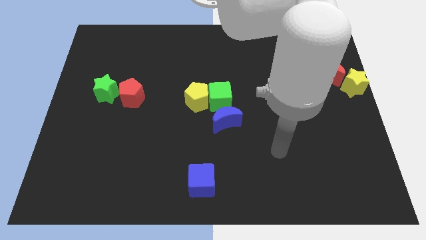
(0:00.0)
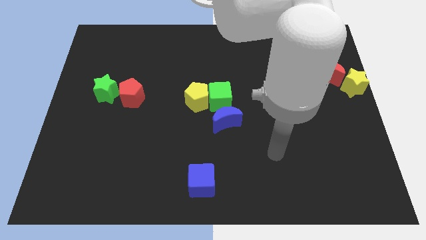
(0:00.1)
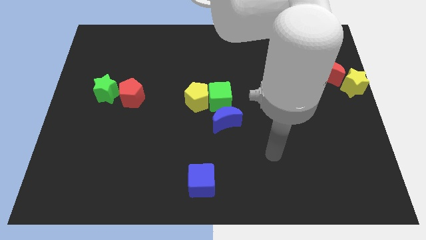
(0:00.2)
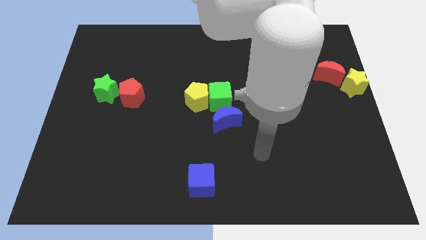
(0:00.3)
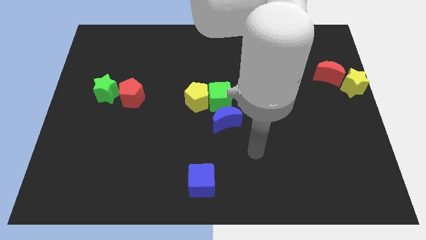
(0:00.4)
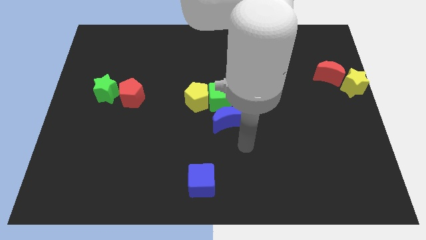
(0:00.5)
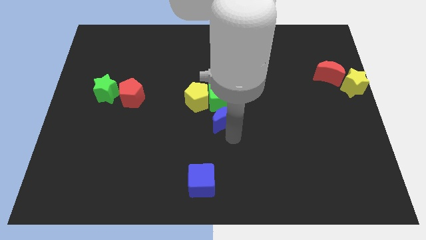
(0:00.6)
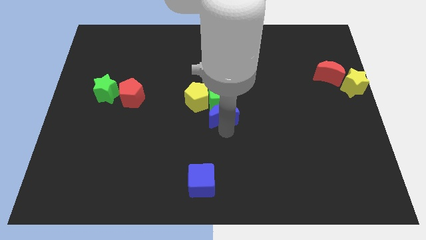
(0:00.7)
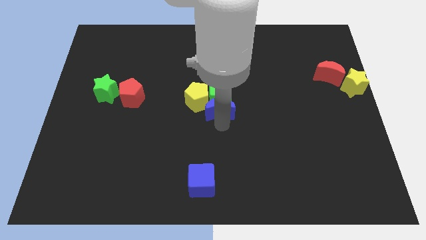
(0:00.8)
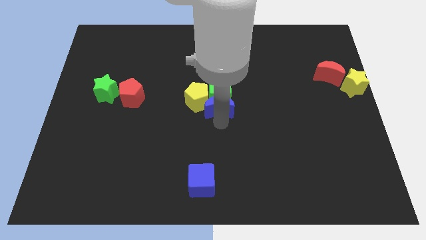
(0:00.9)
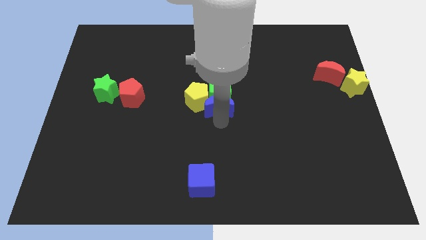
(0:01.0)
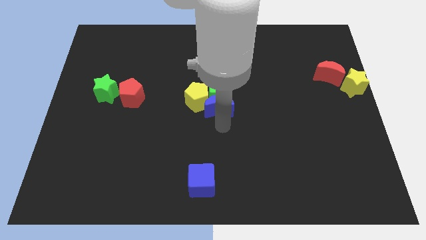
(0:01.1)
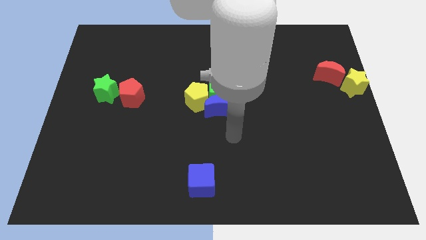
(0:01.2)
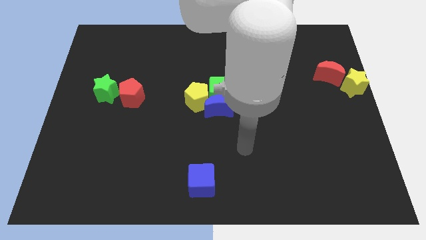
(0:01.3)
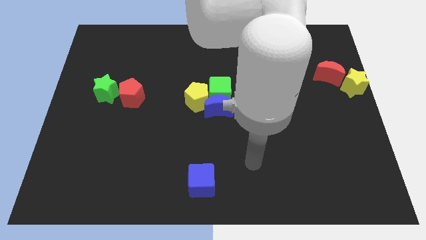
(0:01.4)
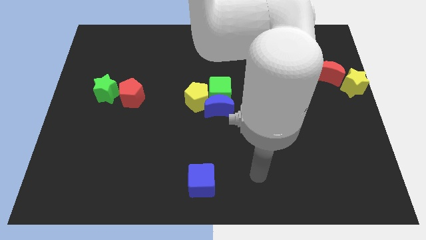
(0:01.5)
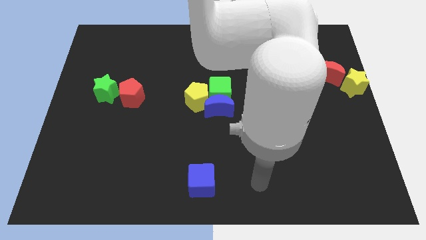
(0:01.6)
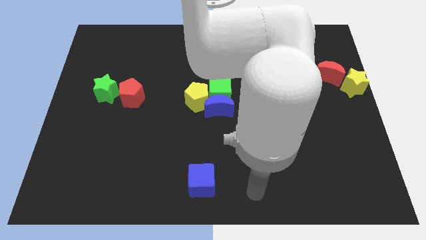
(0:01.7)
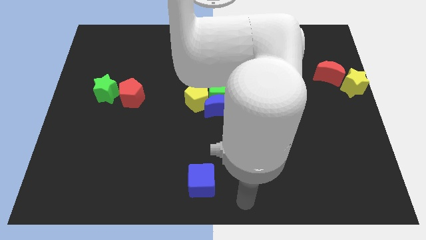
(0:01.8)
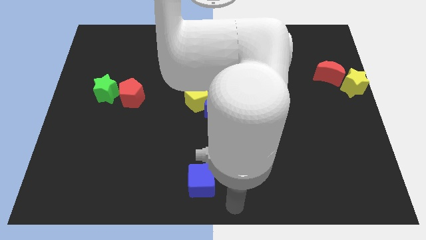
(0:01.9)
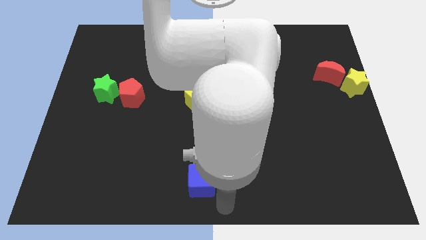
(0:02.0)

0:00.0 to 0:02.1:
move the blue moon into the green cube

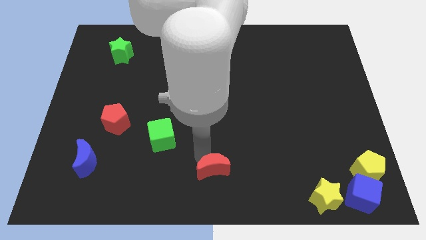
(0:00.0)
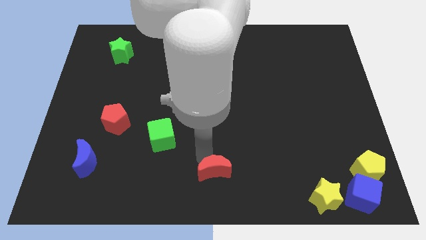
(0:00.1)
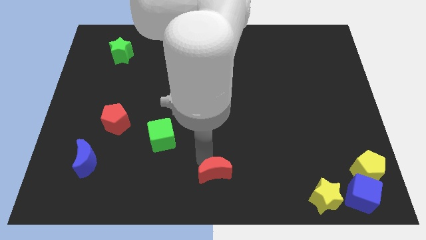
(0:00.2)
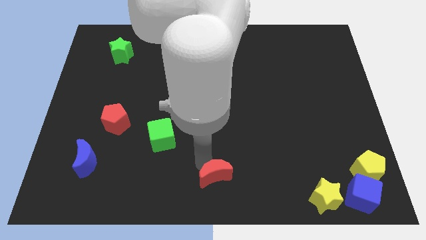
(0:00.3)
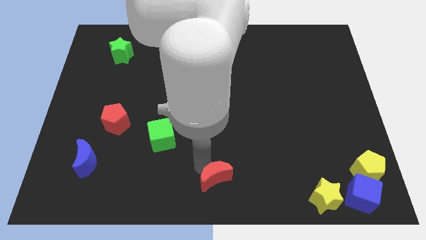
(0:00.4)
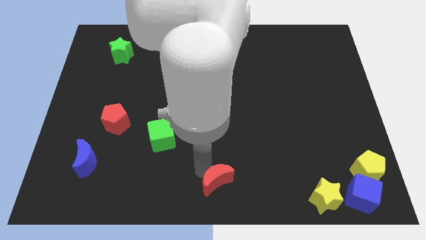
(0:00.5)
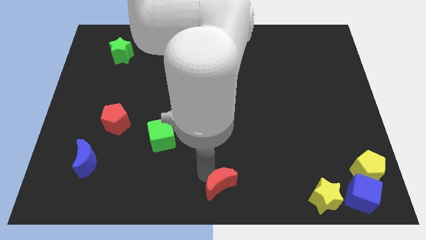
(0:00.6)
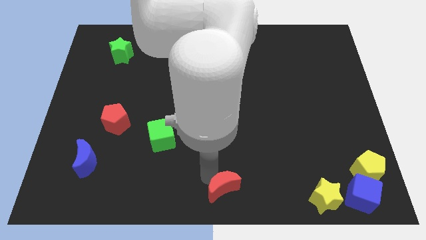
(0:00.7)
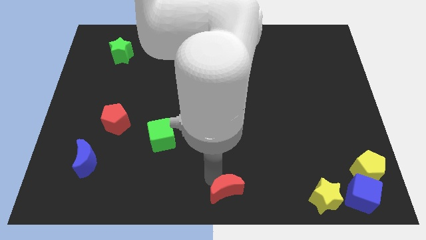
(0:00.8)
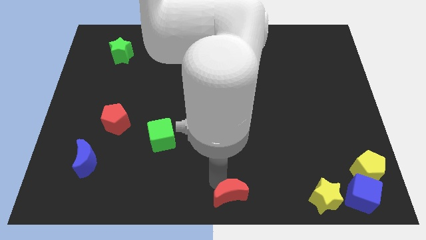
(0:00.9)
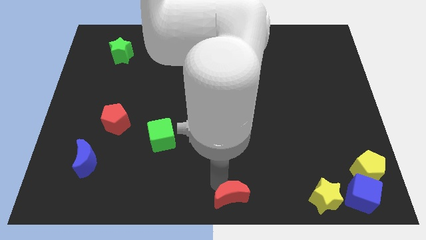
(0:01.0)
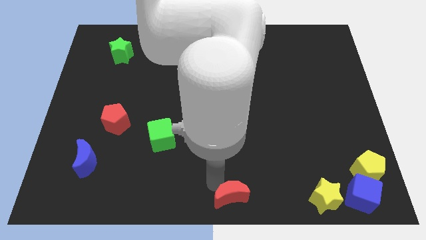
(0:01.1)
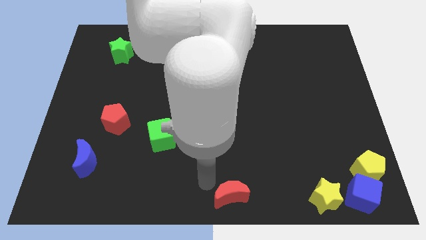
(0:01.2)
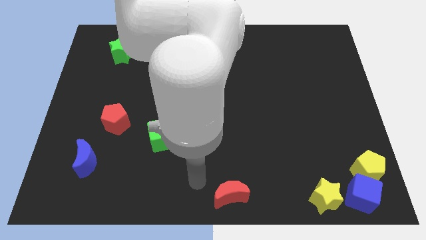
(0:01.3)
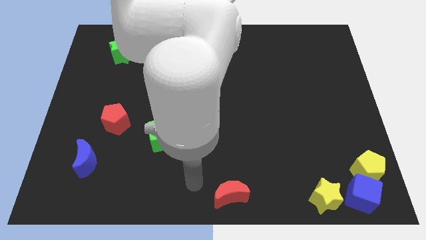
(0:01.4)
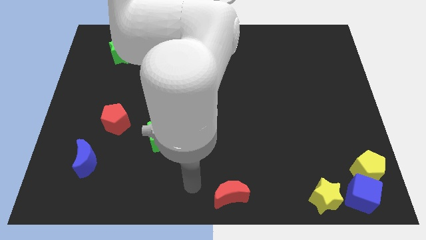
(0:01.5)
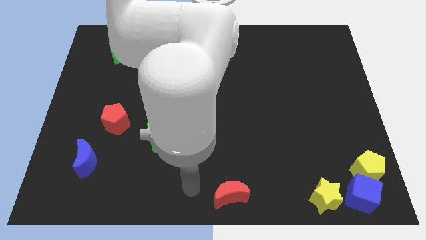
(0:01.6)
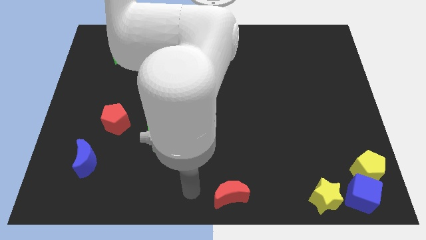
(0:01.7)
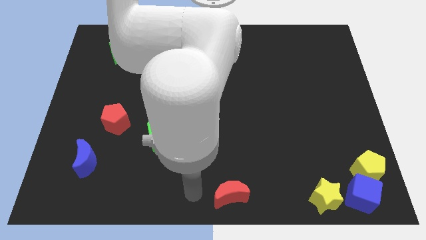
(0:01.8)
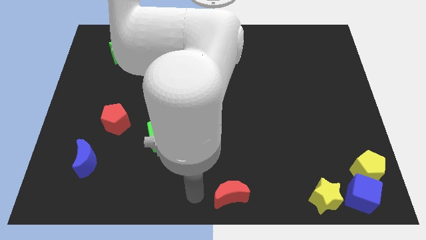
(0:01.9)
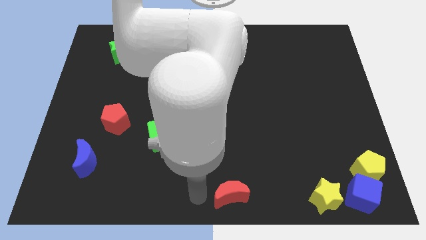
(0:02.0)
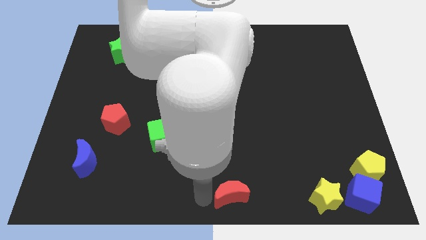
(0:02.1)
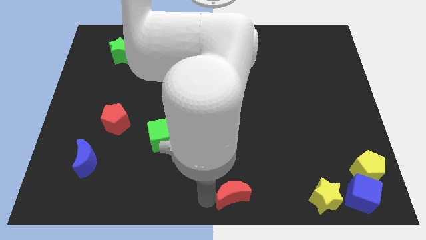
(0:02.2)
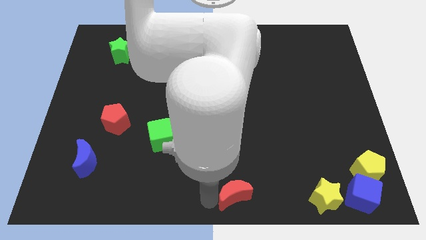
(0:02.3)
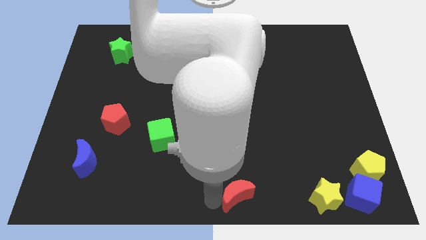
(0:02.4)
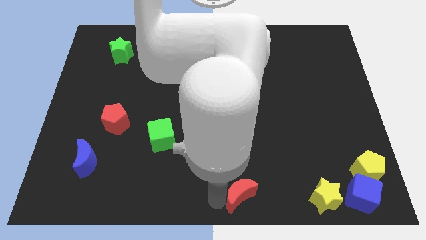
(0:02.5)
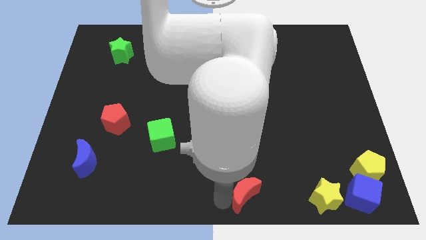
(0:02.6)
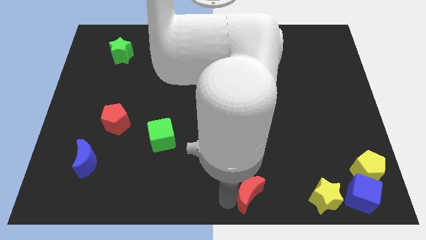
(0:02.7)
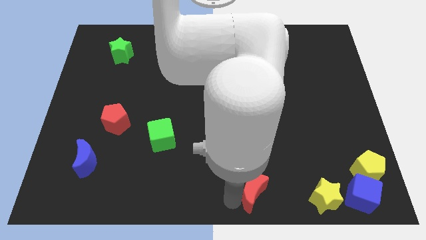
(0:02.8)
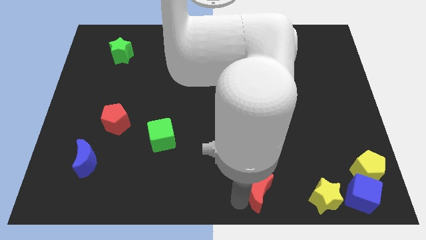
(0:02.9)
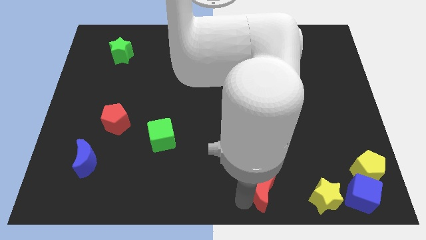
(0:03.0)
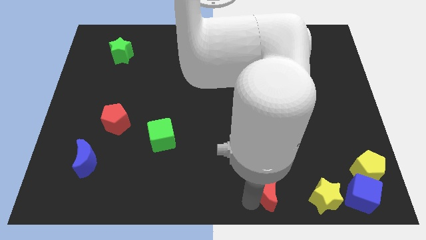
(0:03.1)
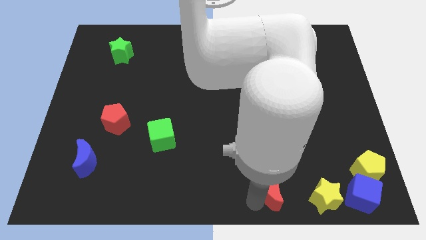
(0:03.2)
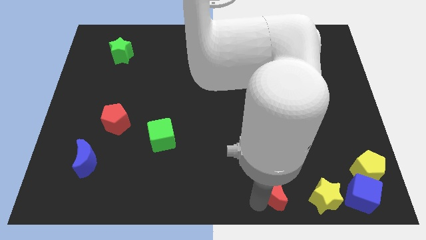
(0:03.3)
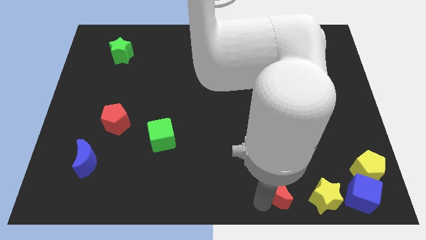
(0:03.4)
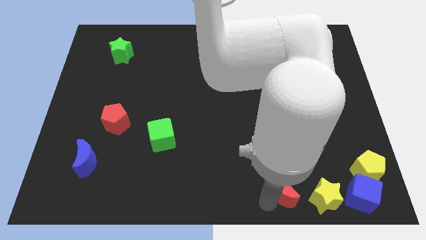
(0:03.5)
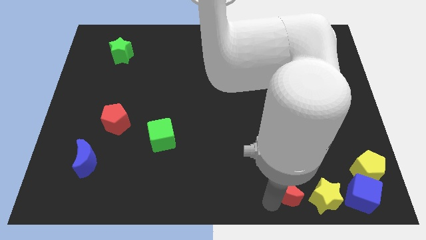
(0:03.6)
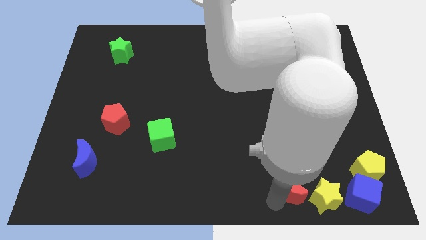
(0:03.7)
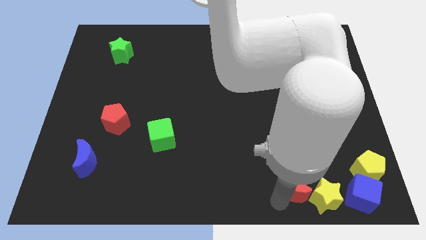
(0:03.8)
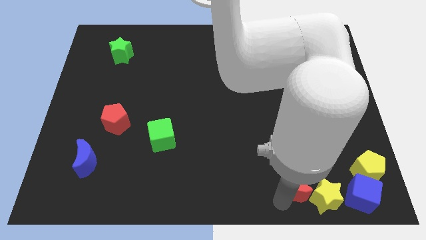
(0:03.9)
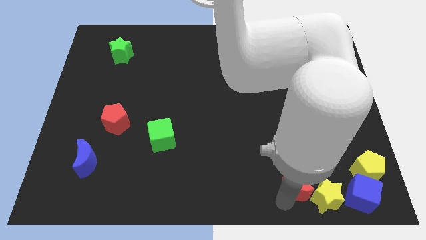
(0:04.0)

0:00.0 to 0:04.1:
make the red crescent to touch the left side of the yellow star

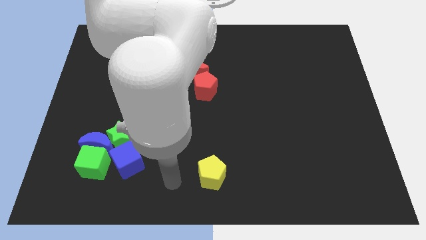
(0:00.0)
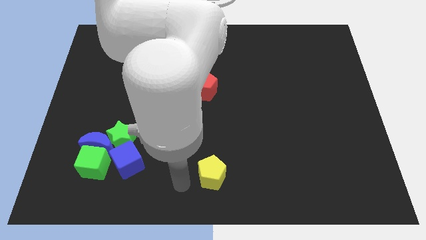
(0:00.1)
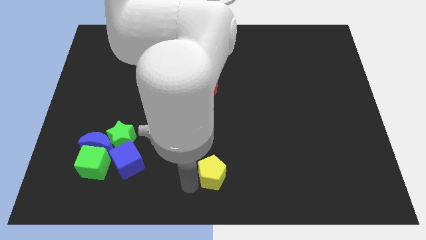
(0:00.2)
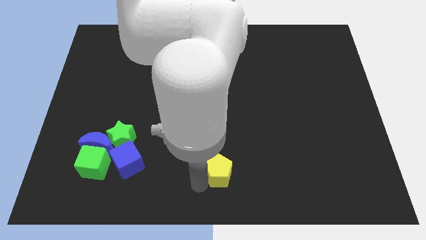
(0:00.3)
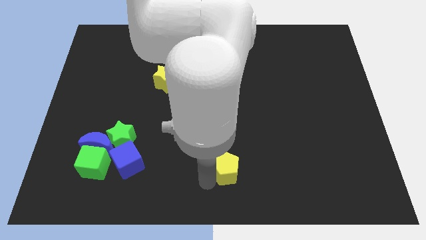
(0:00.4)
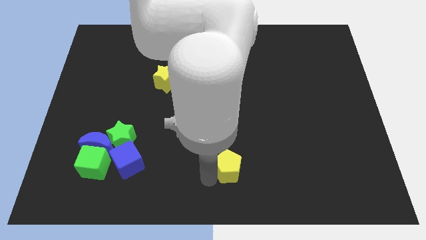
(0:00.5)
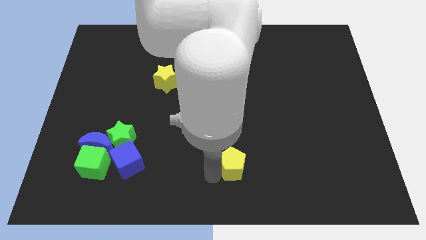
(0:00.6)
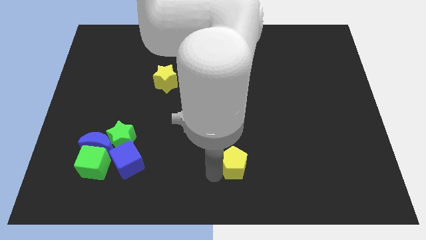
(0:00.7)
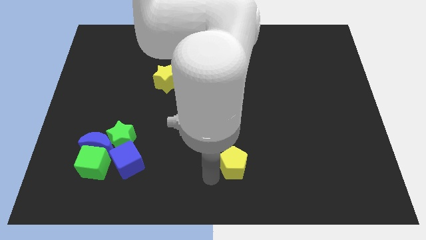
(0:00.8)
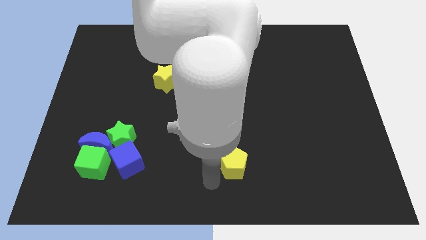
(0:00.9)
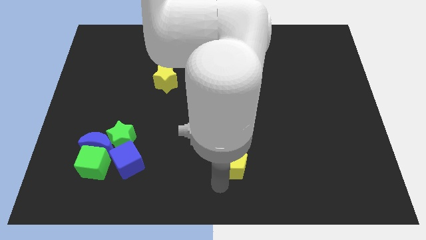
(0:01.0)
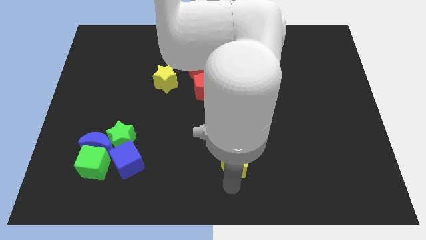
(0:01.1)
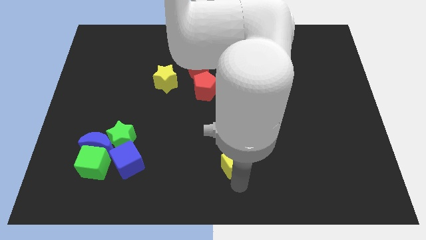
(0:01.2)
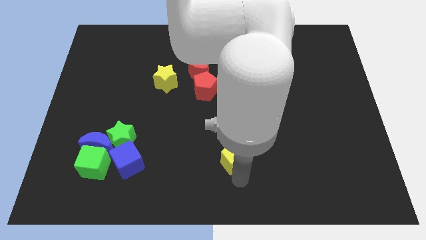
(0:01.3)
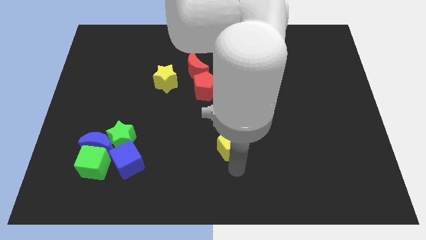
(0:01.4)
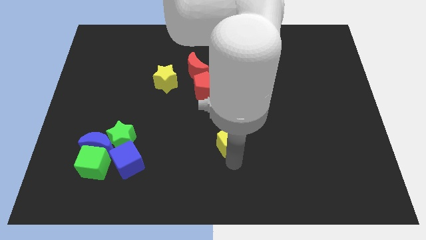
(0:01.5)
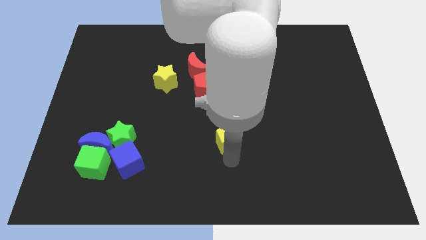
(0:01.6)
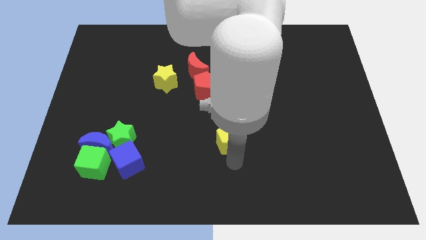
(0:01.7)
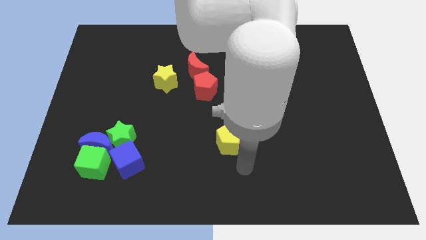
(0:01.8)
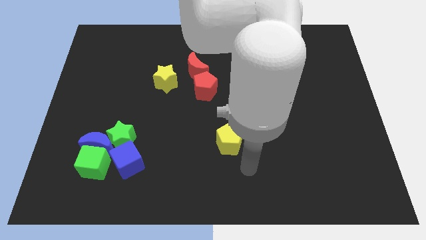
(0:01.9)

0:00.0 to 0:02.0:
move the yellow pentagon towards the center of board

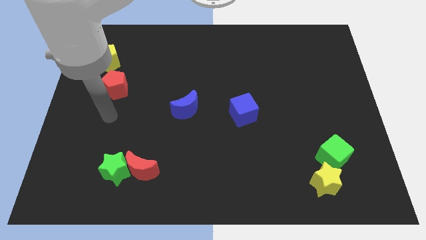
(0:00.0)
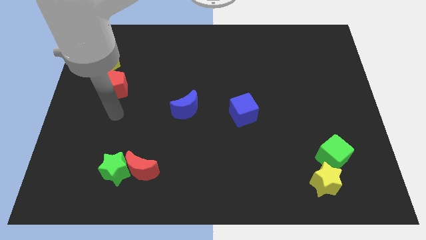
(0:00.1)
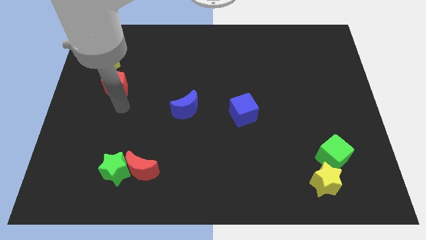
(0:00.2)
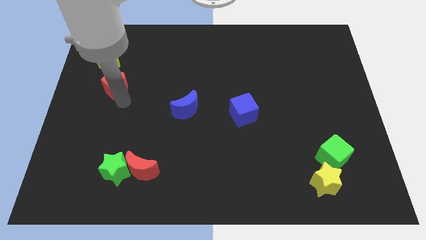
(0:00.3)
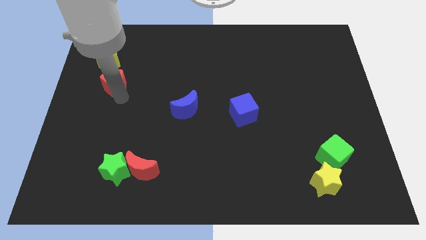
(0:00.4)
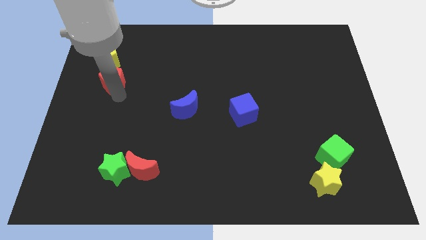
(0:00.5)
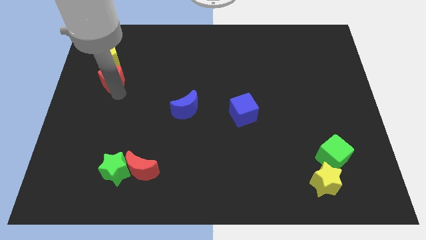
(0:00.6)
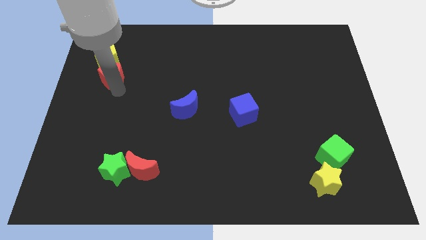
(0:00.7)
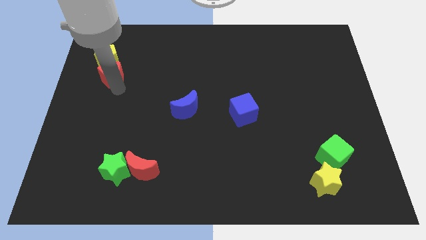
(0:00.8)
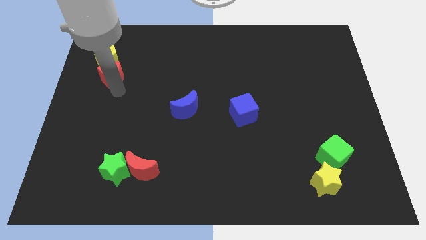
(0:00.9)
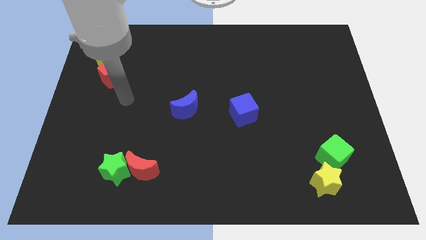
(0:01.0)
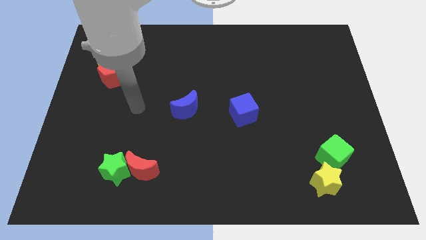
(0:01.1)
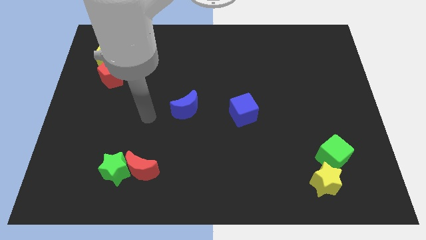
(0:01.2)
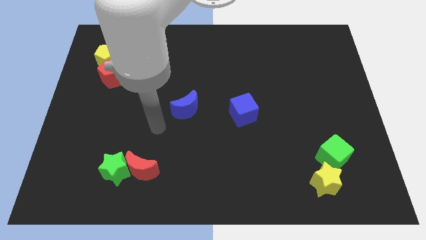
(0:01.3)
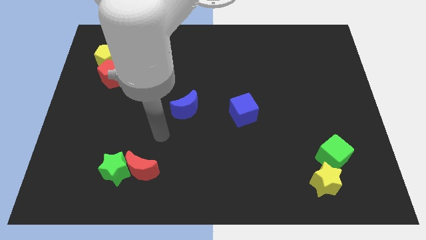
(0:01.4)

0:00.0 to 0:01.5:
move the red pentagon close to the bottom of the yellow pentagon
